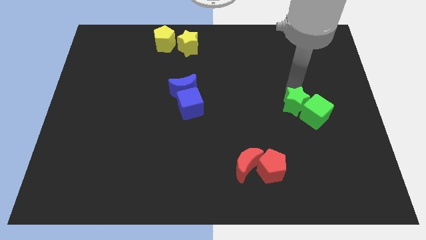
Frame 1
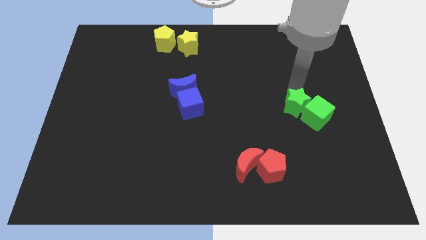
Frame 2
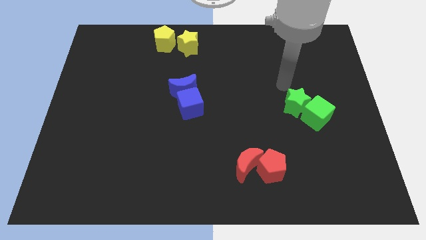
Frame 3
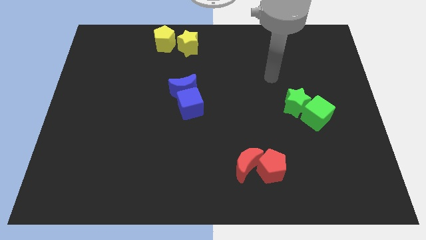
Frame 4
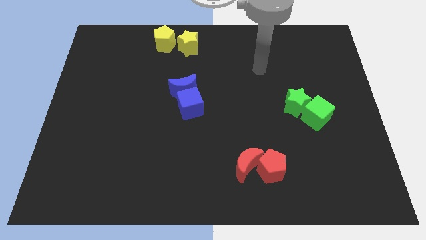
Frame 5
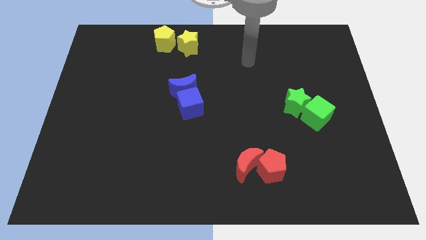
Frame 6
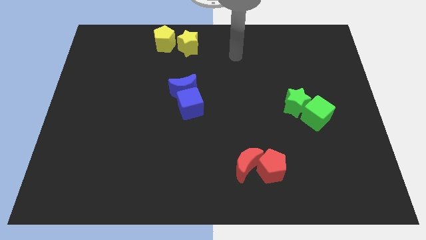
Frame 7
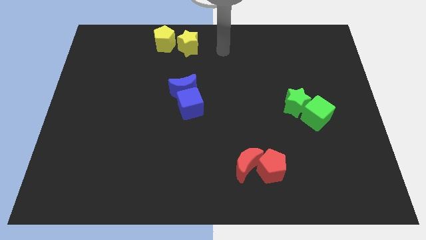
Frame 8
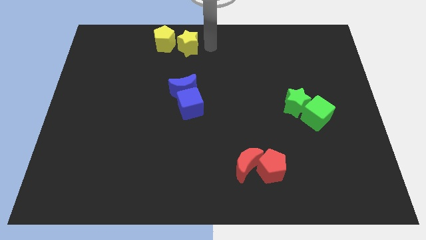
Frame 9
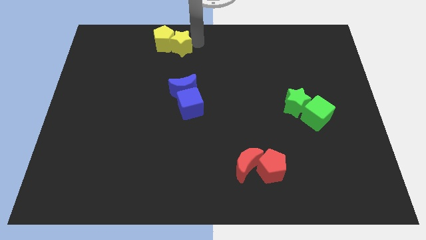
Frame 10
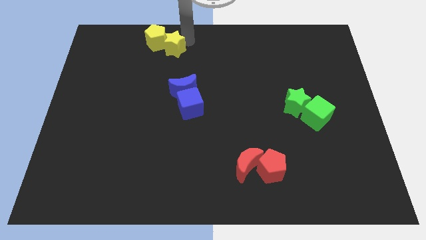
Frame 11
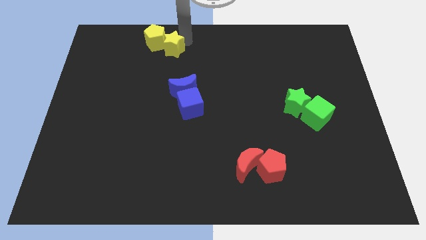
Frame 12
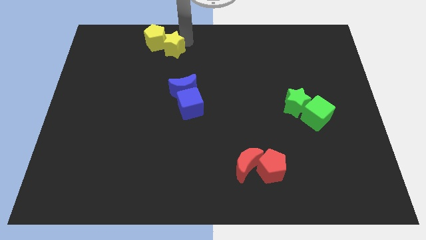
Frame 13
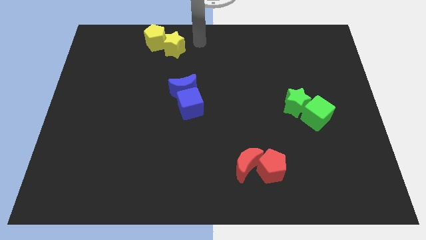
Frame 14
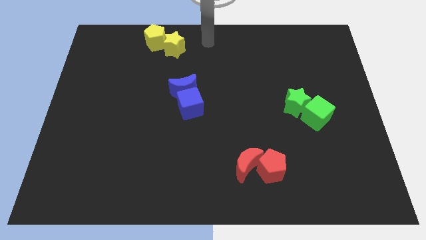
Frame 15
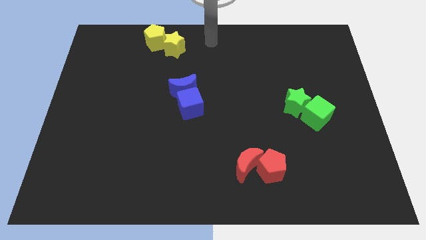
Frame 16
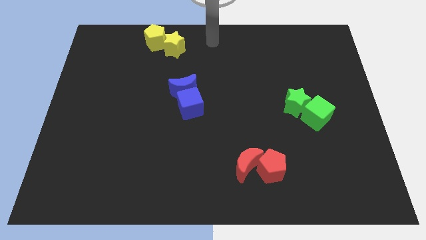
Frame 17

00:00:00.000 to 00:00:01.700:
move green star into the green cube

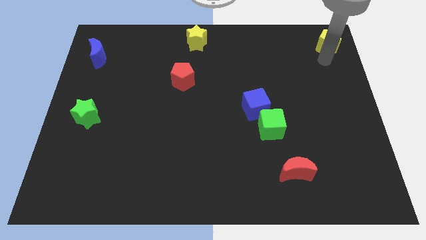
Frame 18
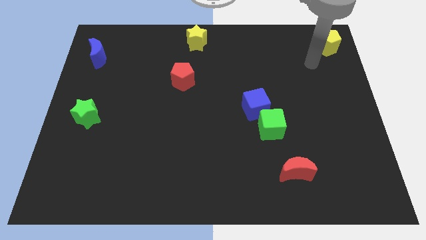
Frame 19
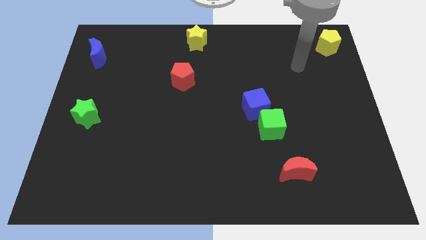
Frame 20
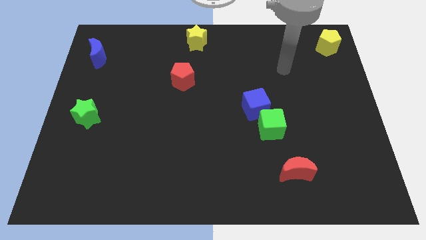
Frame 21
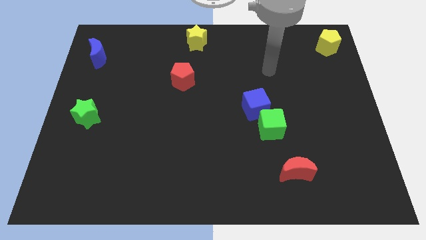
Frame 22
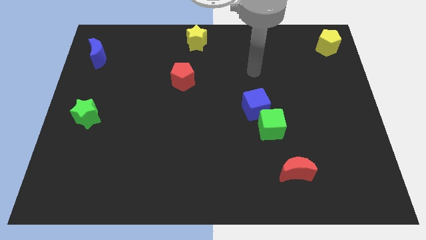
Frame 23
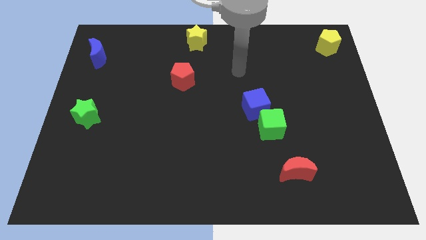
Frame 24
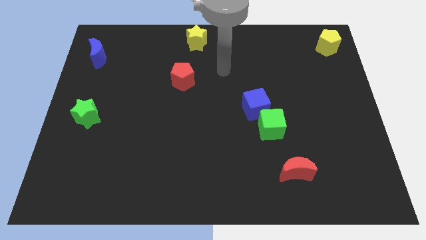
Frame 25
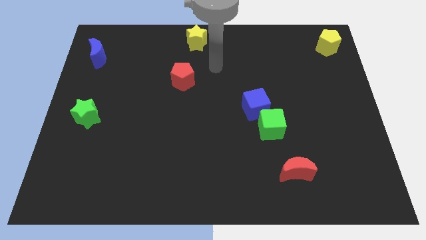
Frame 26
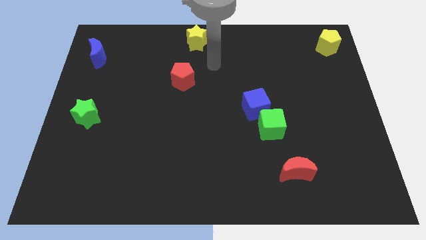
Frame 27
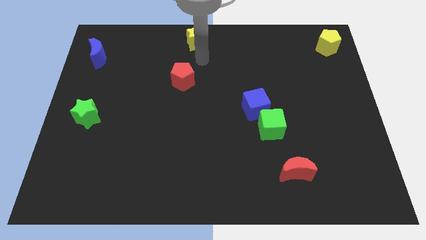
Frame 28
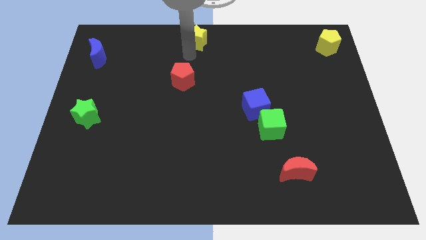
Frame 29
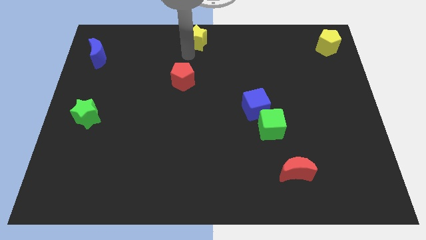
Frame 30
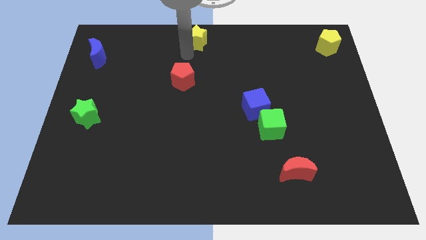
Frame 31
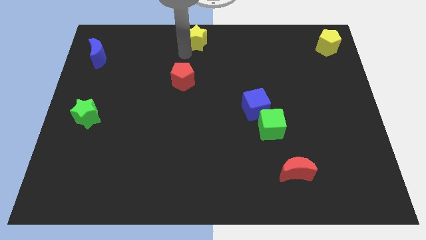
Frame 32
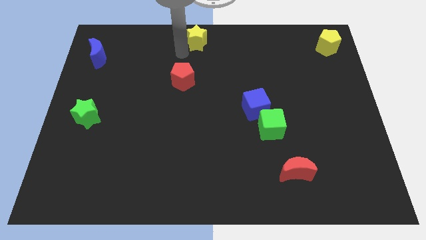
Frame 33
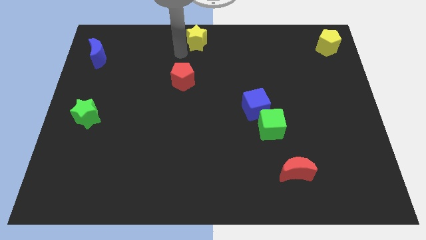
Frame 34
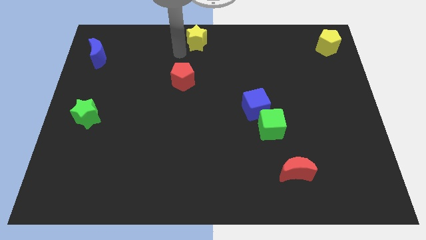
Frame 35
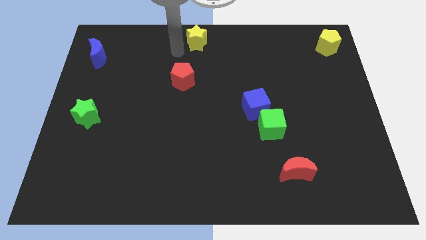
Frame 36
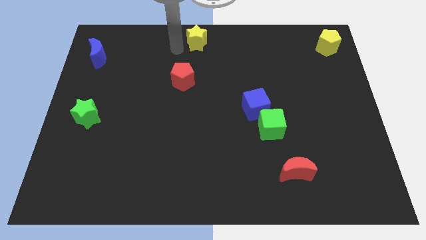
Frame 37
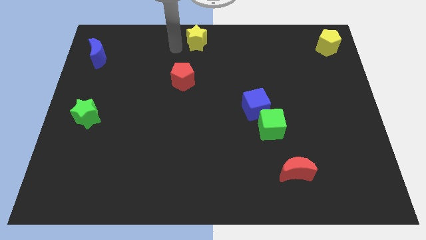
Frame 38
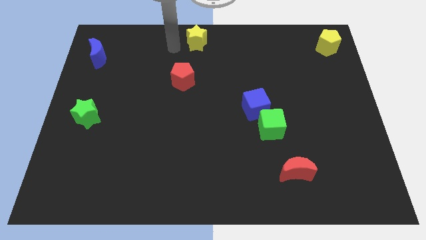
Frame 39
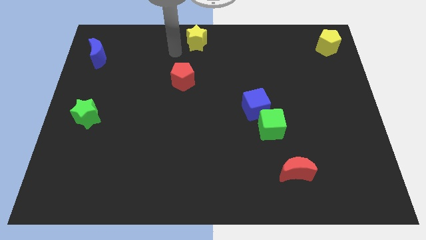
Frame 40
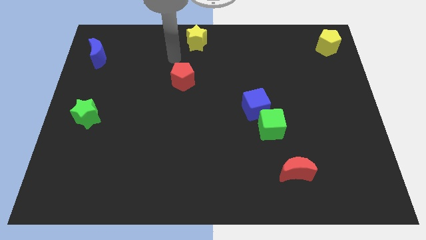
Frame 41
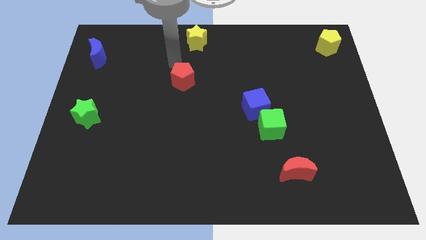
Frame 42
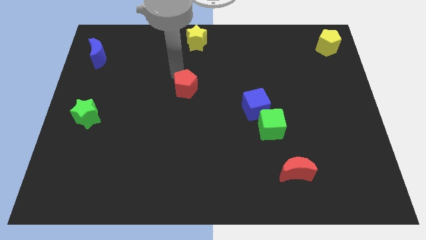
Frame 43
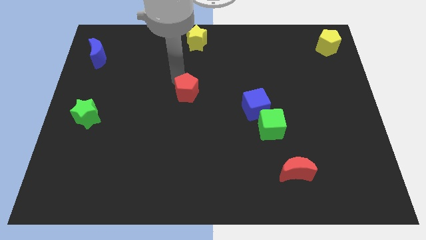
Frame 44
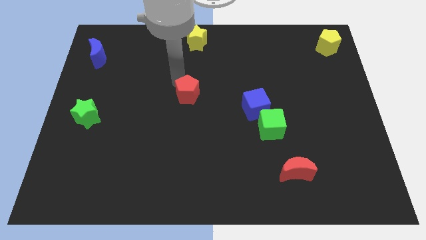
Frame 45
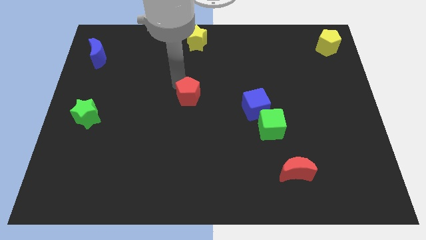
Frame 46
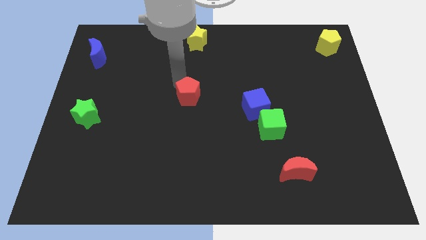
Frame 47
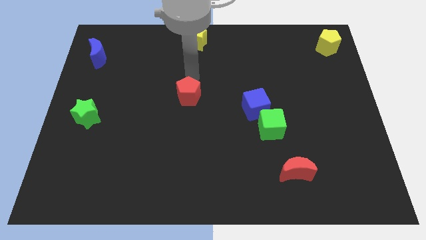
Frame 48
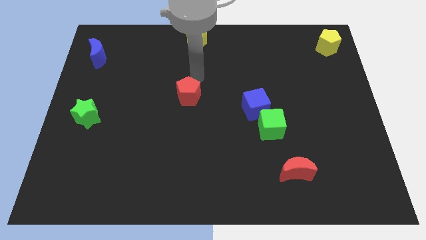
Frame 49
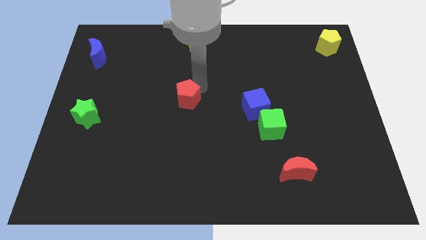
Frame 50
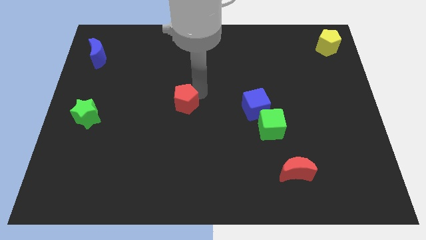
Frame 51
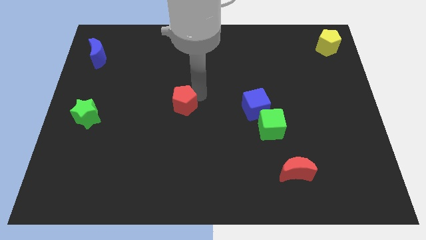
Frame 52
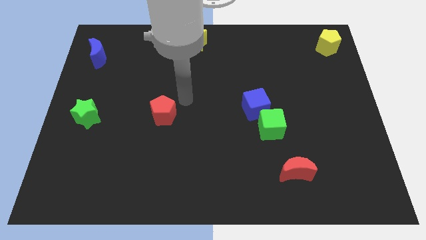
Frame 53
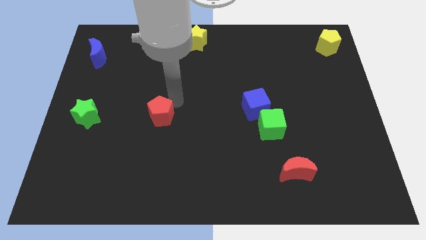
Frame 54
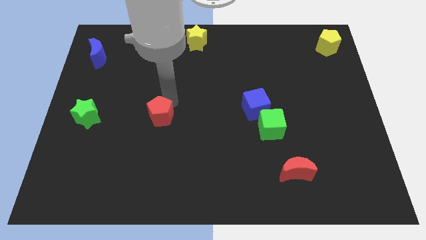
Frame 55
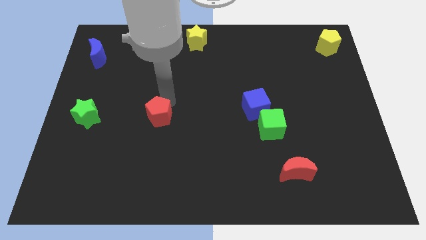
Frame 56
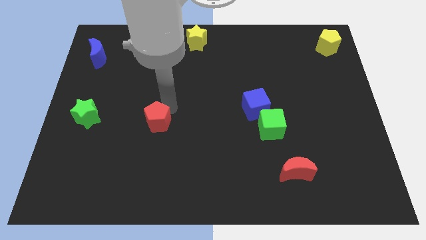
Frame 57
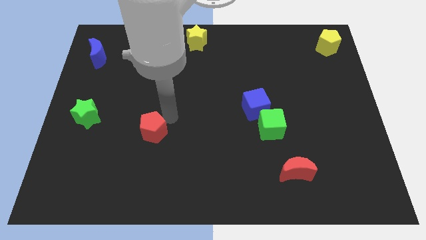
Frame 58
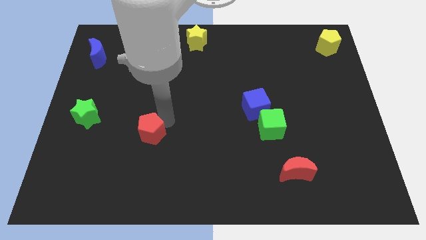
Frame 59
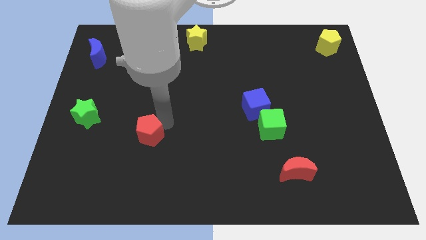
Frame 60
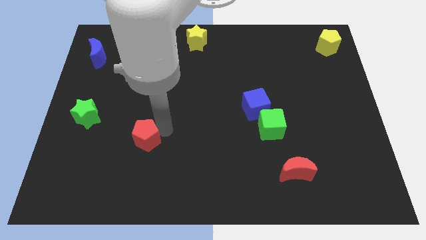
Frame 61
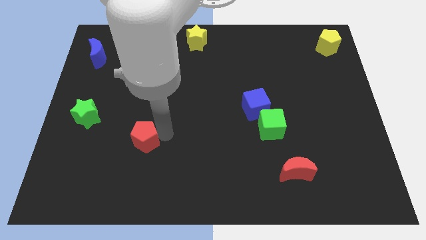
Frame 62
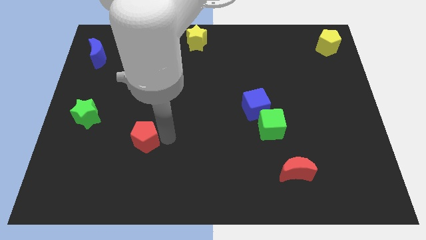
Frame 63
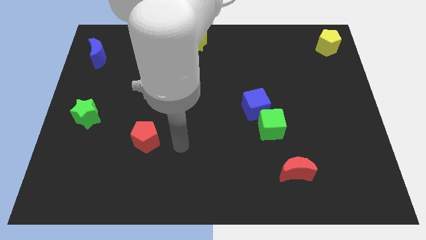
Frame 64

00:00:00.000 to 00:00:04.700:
push the red pentagon diagonally bottom right to the green star

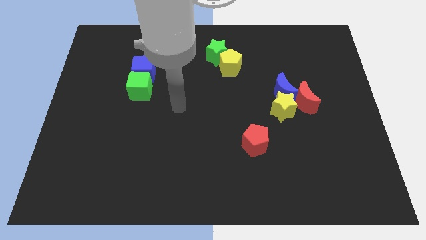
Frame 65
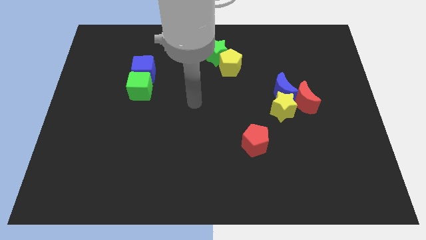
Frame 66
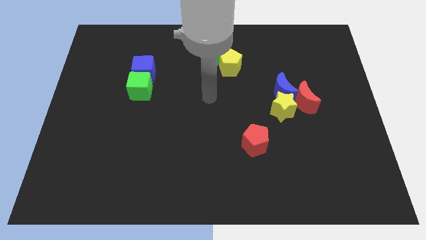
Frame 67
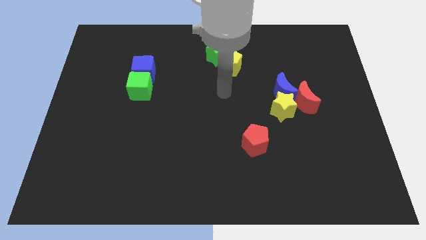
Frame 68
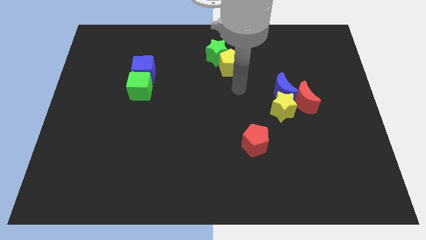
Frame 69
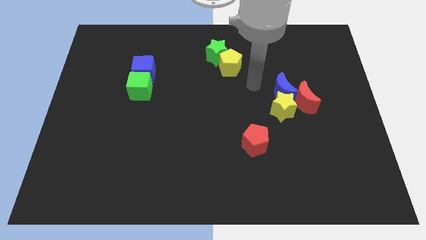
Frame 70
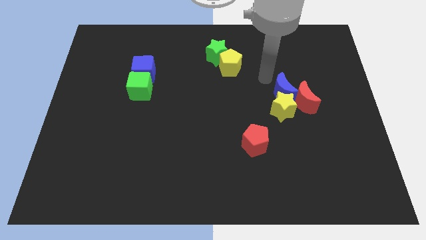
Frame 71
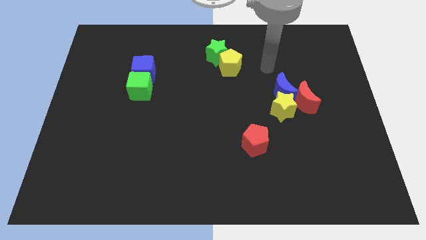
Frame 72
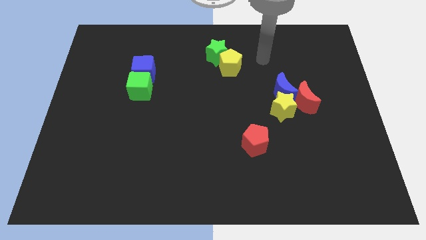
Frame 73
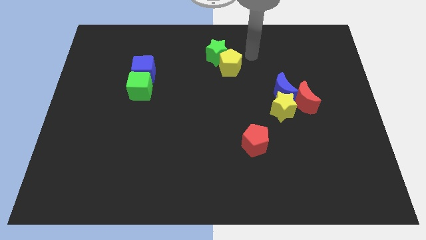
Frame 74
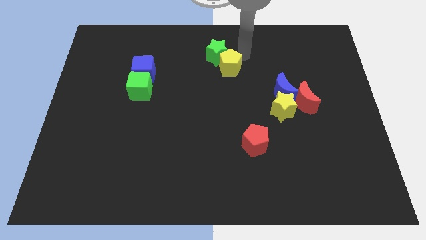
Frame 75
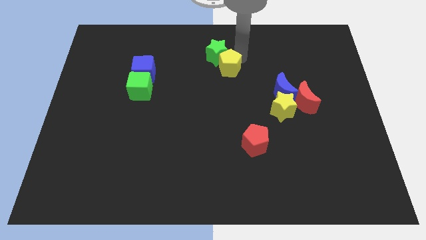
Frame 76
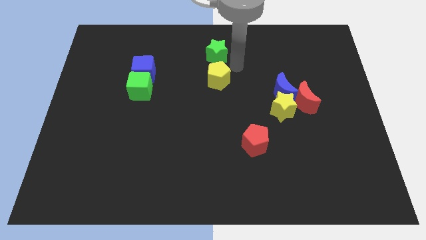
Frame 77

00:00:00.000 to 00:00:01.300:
move the arm towards the top right of the yellow pentagon

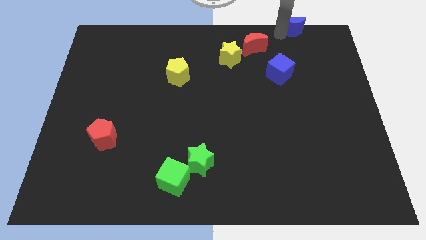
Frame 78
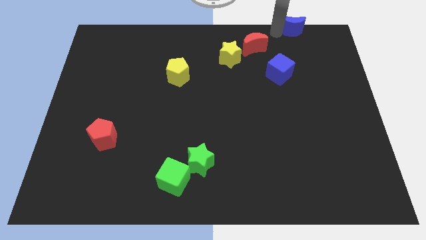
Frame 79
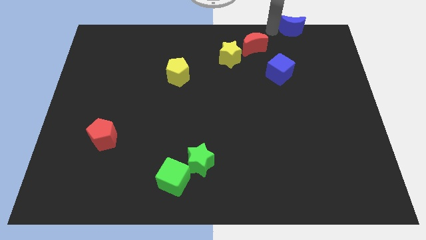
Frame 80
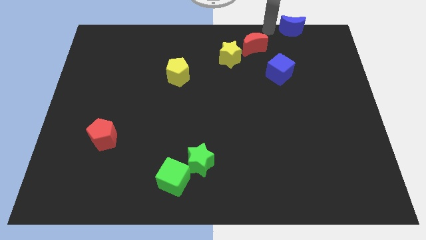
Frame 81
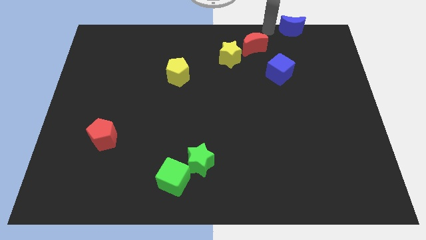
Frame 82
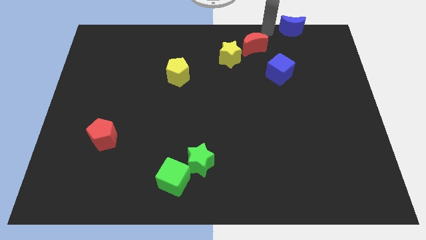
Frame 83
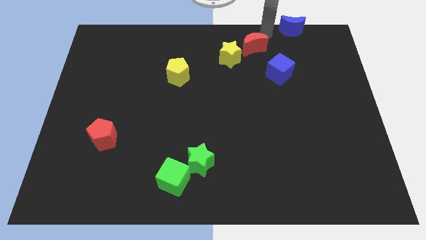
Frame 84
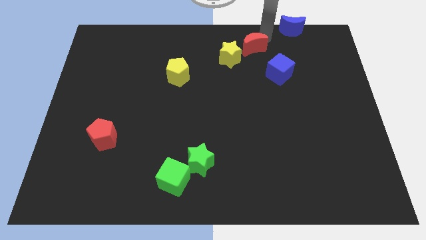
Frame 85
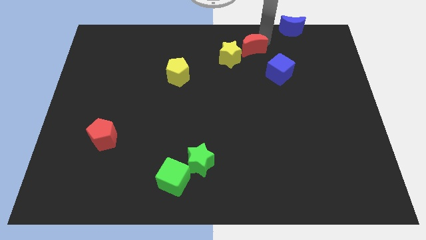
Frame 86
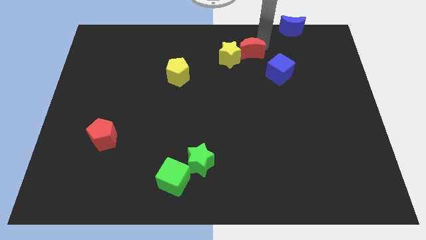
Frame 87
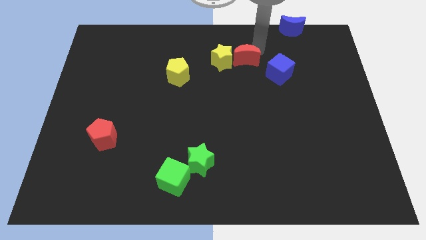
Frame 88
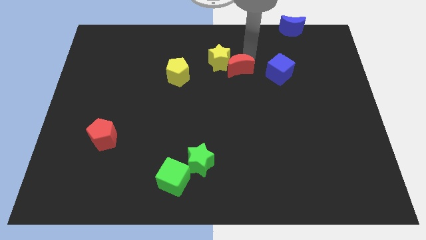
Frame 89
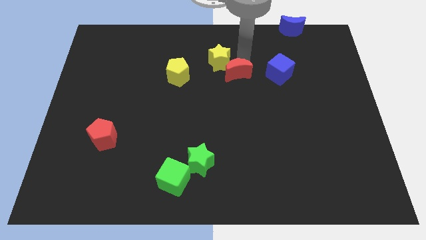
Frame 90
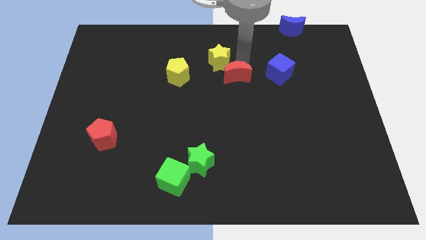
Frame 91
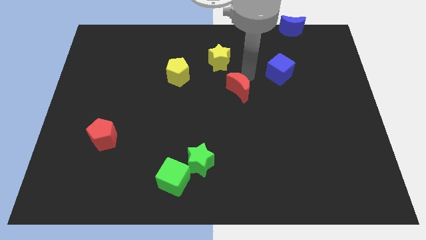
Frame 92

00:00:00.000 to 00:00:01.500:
move the red crescent to the bottom right of the yellow star
